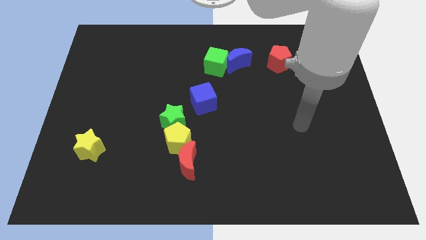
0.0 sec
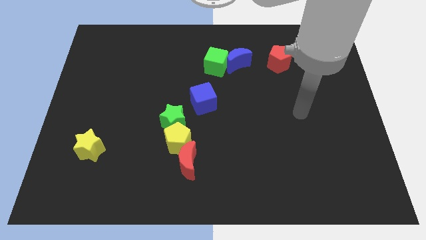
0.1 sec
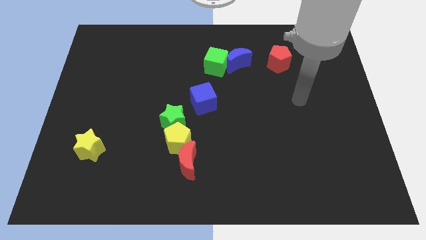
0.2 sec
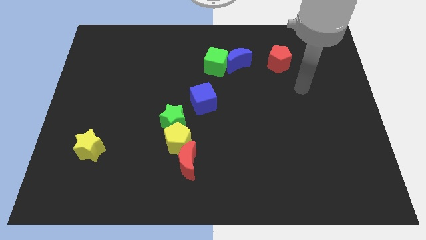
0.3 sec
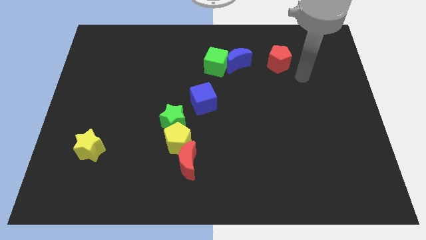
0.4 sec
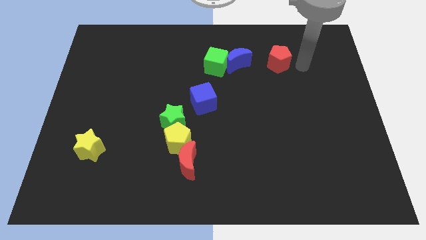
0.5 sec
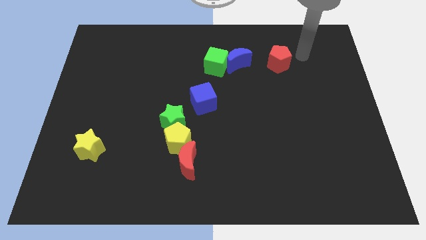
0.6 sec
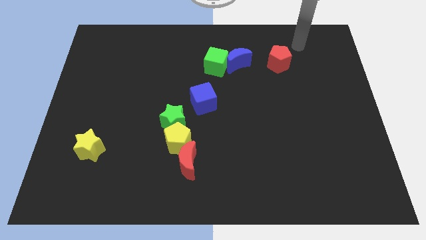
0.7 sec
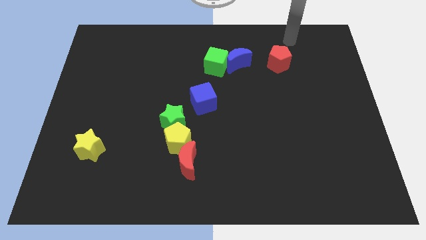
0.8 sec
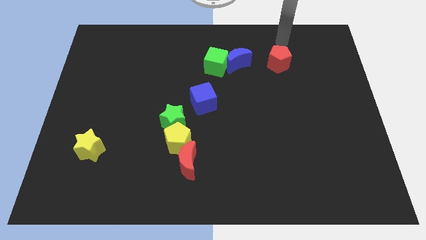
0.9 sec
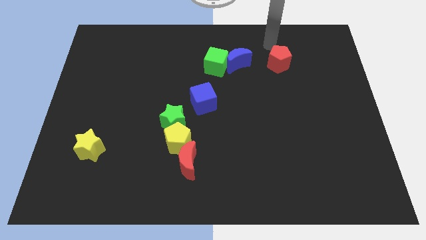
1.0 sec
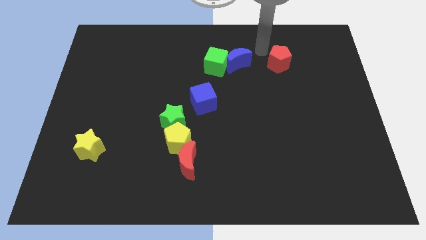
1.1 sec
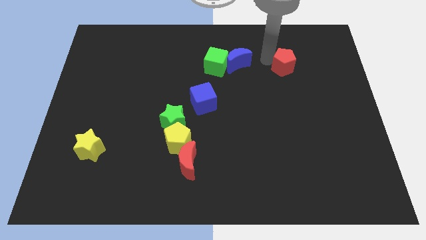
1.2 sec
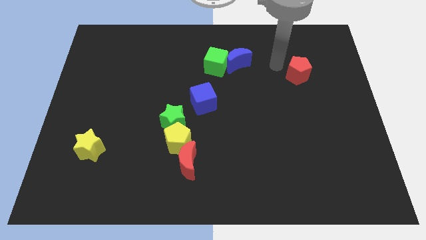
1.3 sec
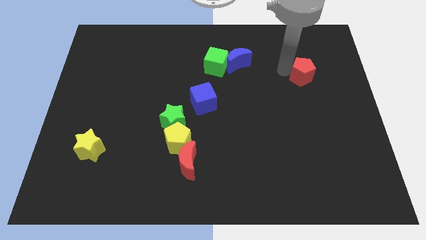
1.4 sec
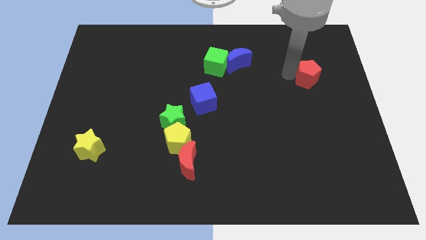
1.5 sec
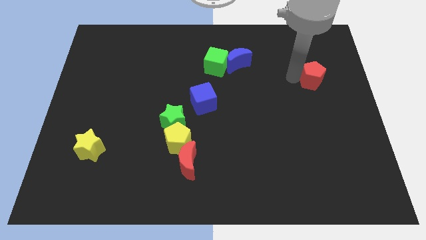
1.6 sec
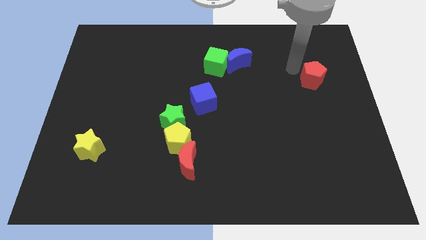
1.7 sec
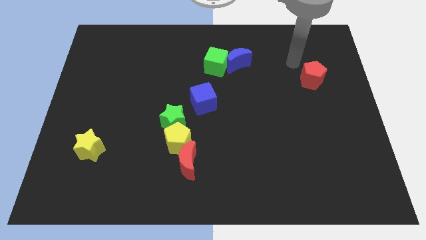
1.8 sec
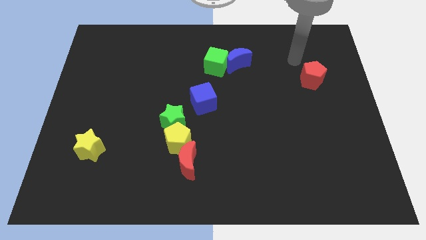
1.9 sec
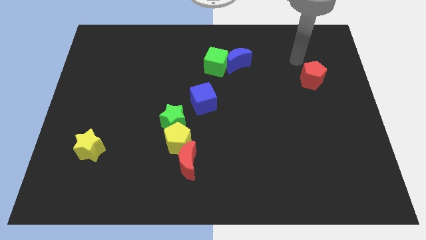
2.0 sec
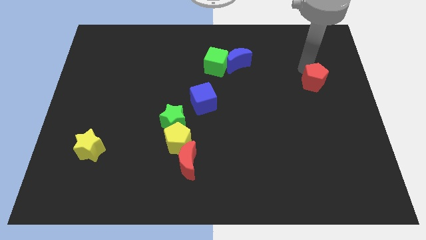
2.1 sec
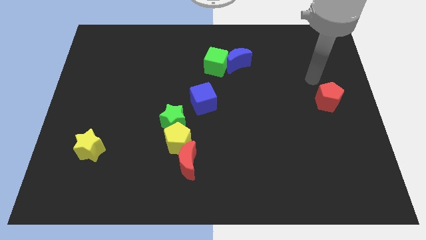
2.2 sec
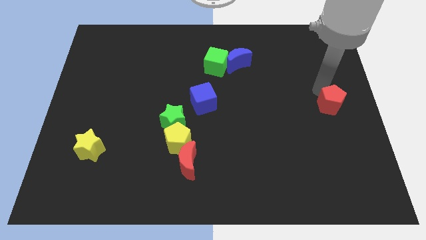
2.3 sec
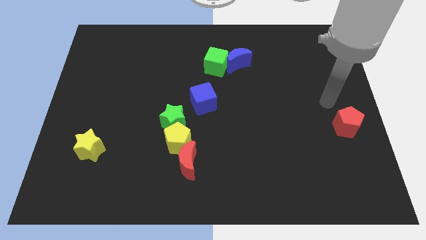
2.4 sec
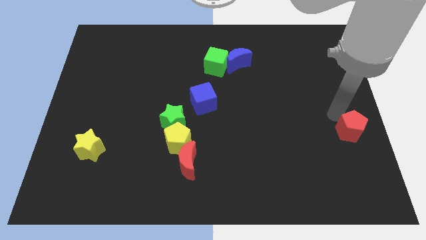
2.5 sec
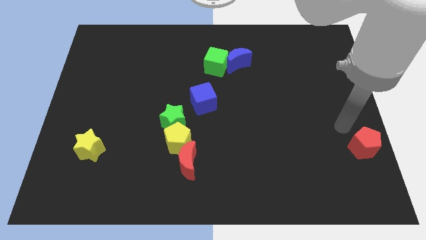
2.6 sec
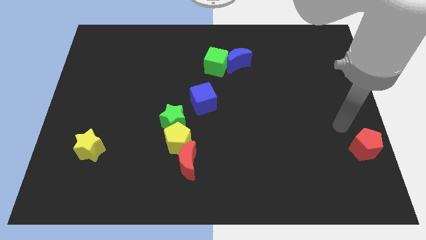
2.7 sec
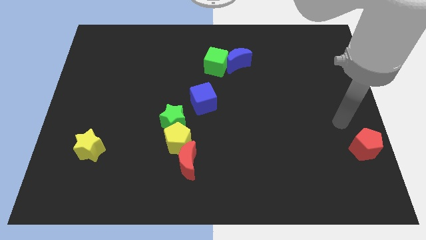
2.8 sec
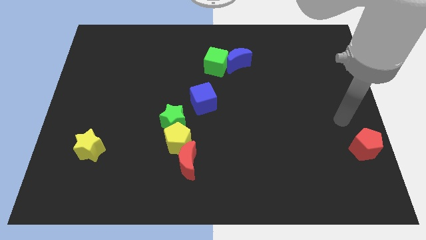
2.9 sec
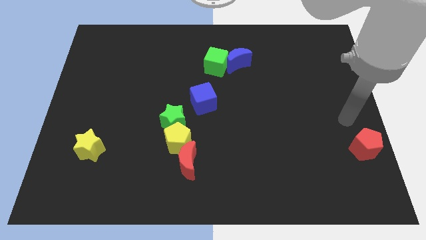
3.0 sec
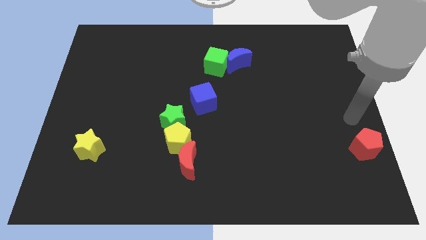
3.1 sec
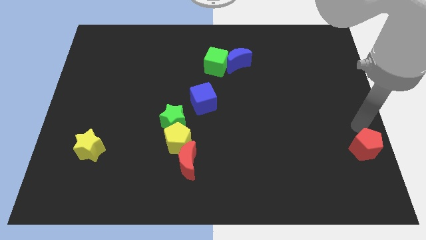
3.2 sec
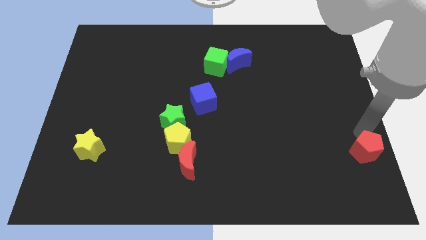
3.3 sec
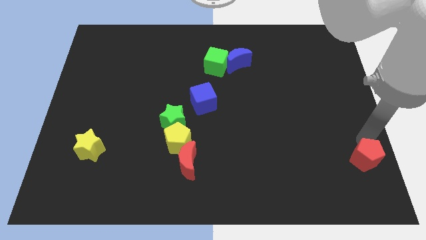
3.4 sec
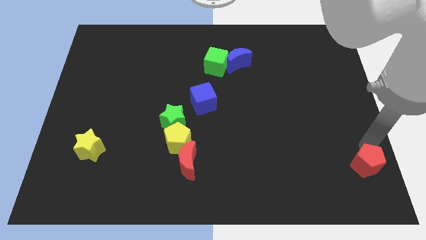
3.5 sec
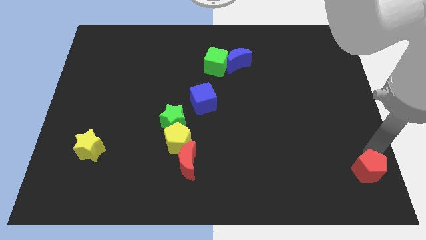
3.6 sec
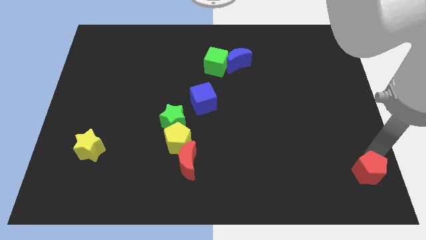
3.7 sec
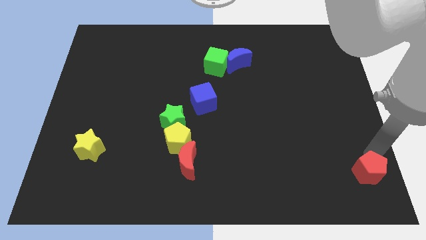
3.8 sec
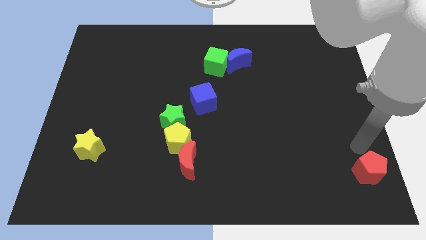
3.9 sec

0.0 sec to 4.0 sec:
place red pentagon to the bottom right corner of the board

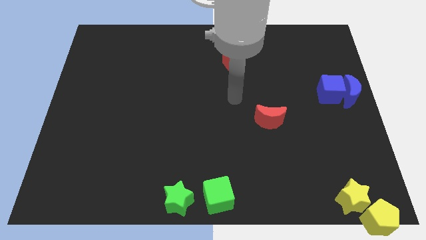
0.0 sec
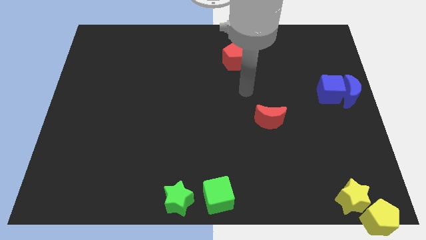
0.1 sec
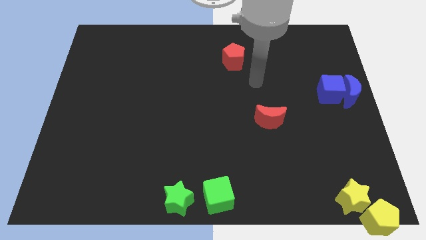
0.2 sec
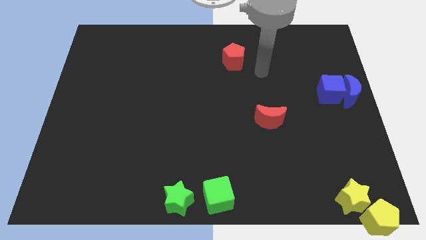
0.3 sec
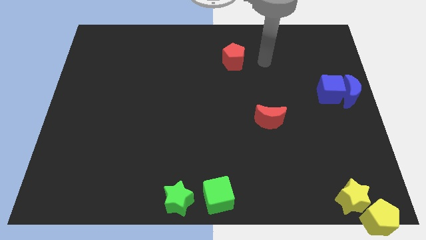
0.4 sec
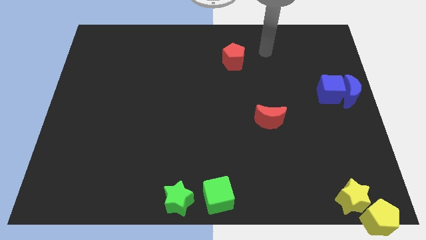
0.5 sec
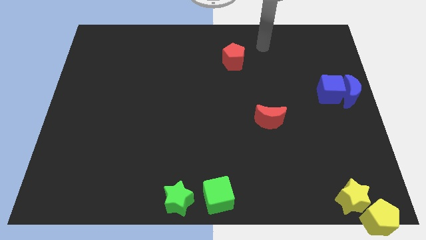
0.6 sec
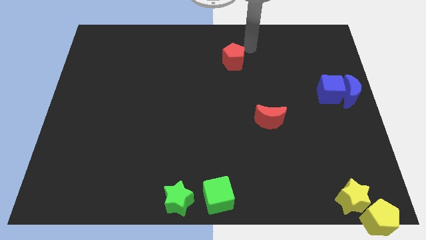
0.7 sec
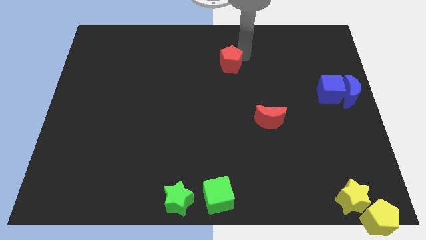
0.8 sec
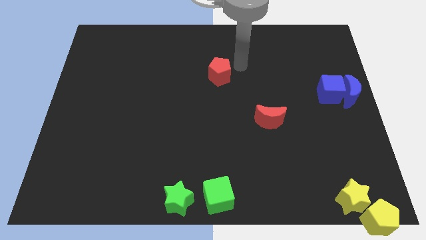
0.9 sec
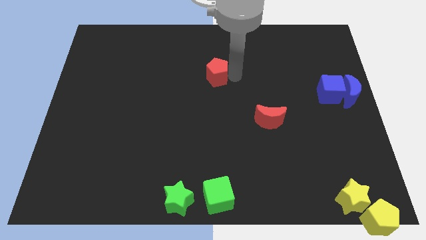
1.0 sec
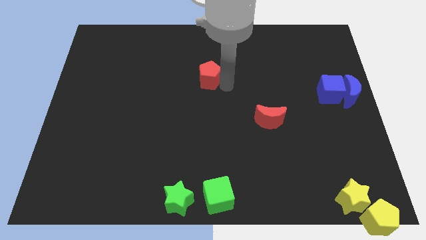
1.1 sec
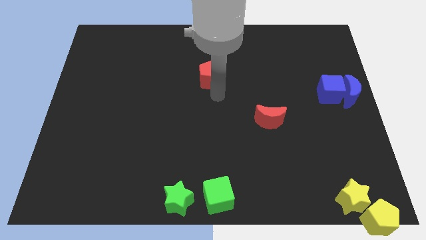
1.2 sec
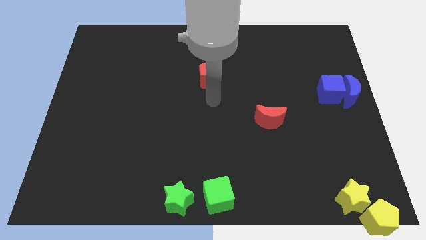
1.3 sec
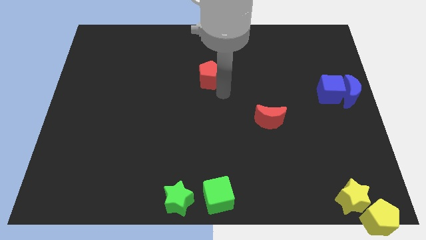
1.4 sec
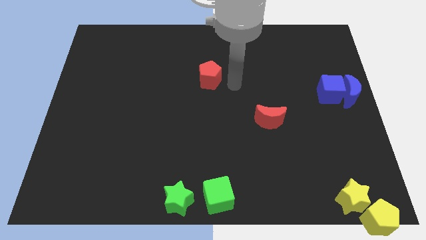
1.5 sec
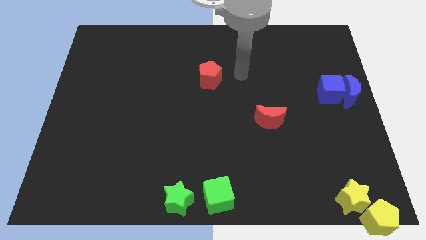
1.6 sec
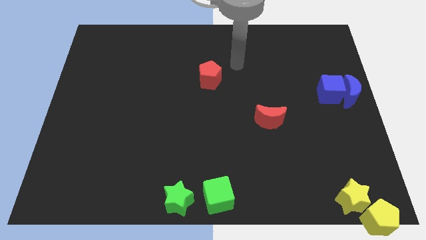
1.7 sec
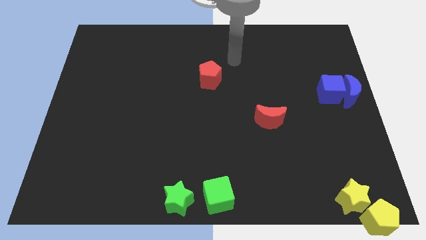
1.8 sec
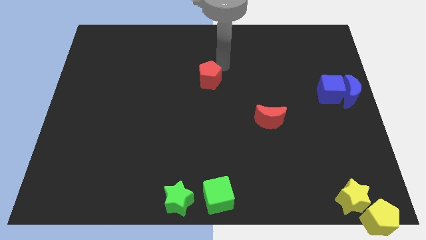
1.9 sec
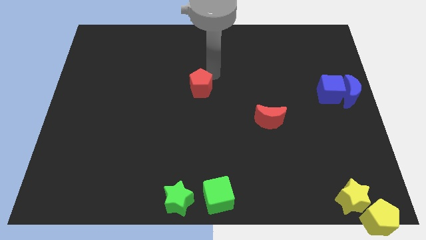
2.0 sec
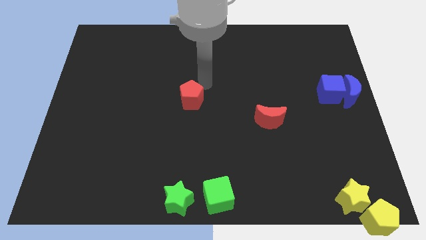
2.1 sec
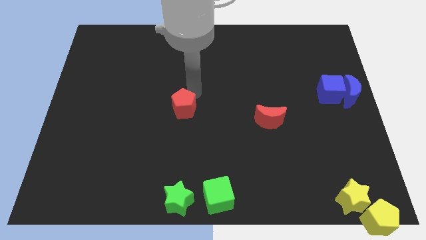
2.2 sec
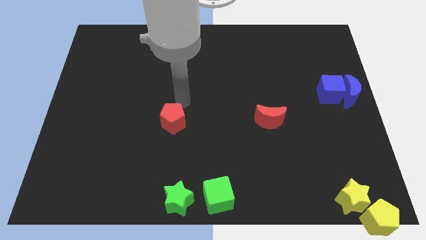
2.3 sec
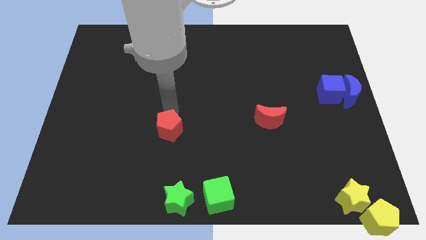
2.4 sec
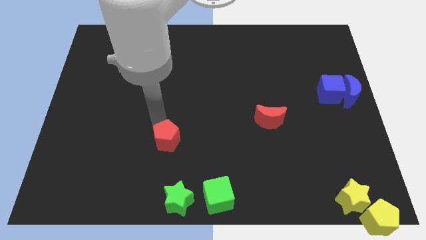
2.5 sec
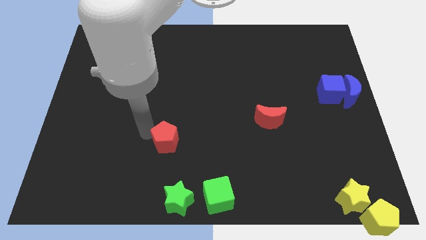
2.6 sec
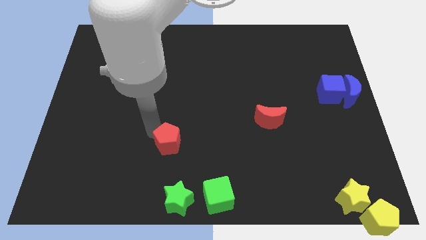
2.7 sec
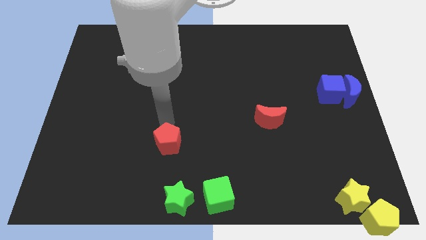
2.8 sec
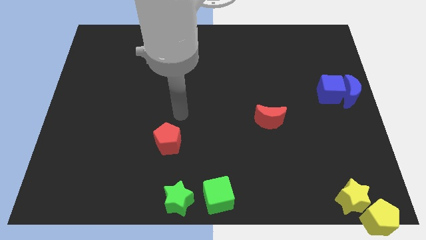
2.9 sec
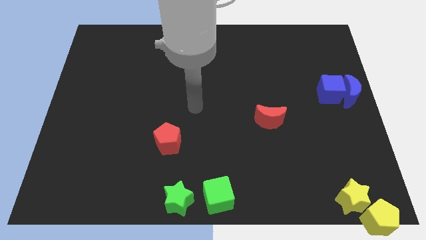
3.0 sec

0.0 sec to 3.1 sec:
move red pentagon towards the bottom

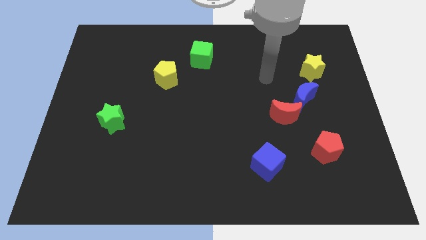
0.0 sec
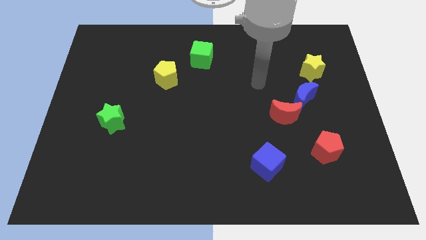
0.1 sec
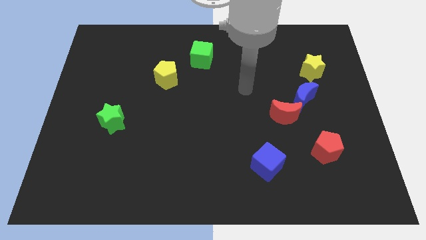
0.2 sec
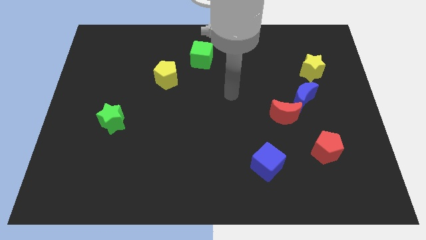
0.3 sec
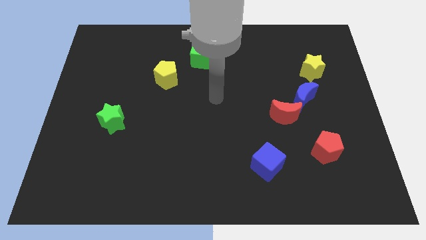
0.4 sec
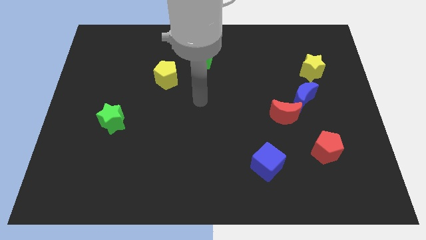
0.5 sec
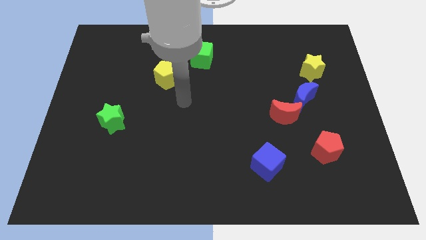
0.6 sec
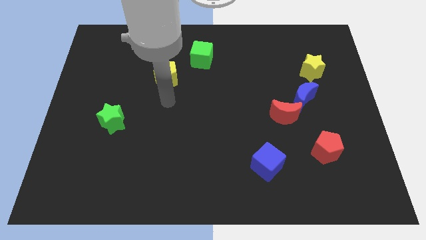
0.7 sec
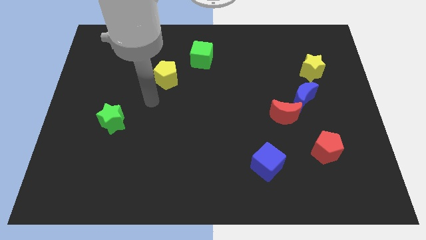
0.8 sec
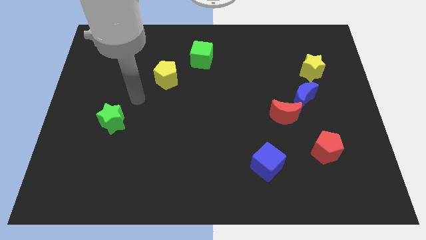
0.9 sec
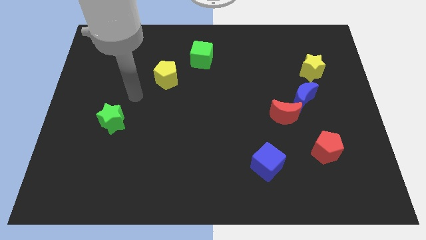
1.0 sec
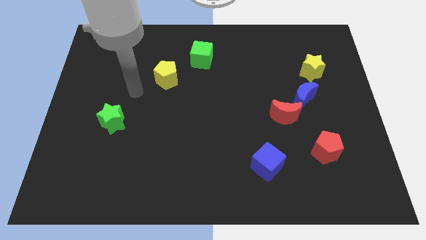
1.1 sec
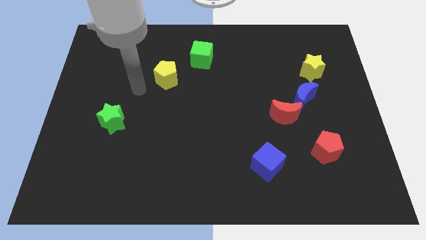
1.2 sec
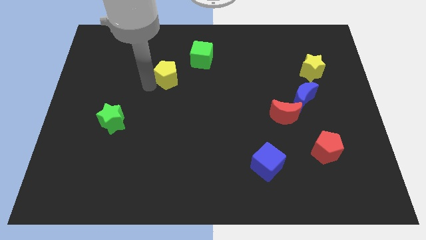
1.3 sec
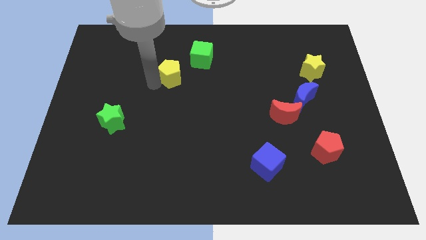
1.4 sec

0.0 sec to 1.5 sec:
move the arm towards the left of yellow pentagon on the board

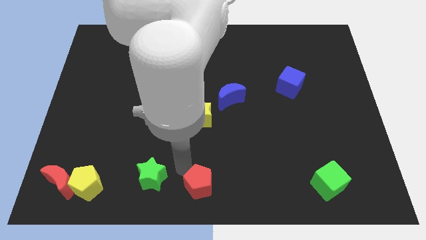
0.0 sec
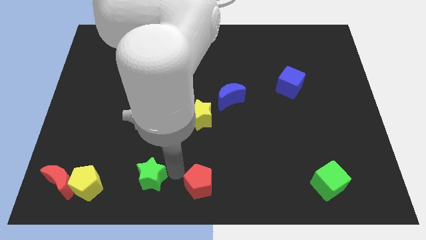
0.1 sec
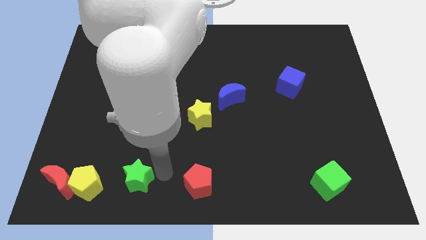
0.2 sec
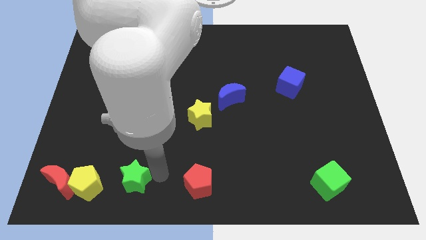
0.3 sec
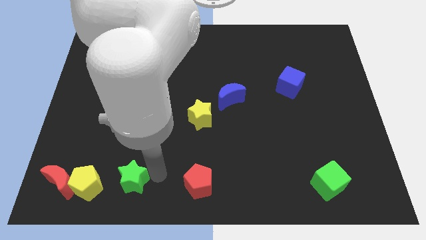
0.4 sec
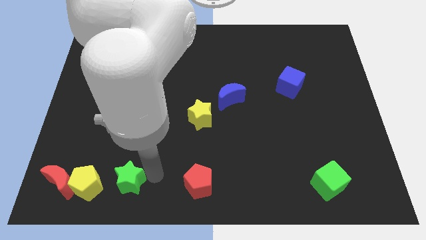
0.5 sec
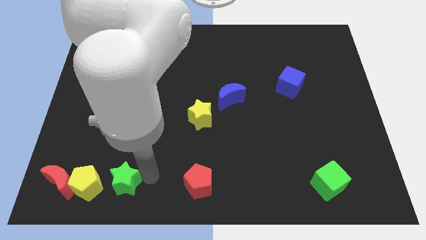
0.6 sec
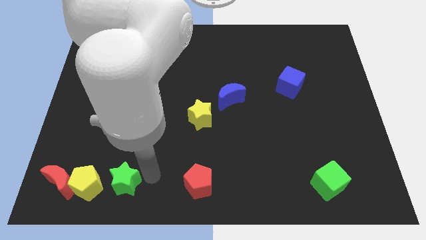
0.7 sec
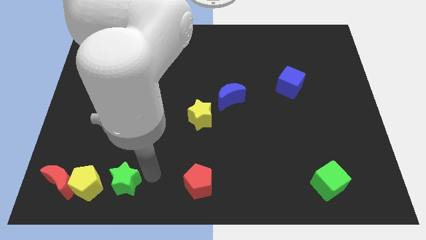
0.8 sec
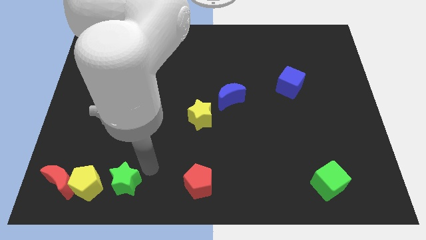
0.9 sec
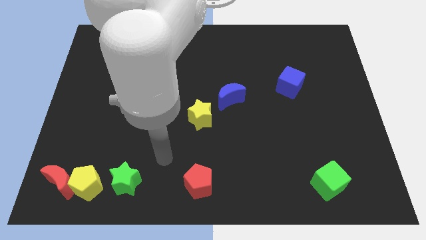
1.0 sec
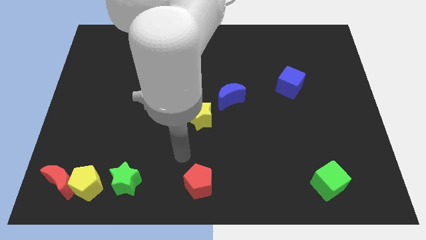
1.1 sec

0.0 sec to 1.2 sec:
move the green star to the right of the yellow pentagon
